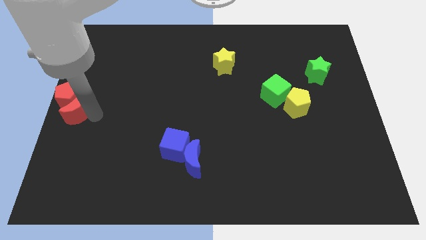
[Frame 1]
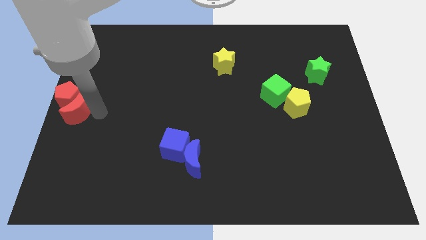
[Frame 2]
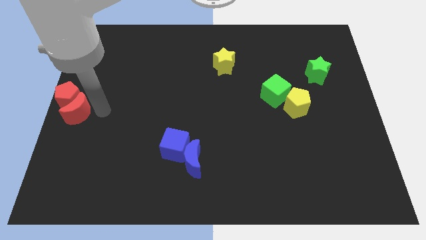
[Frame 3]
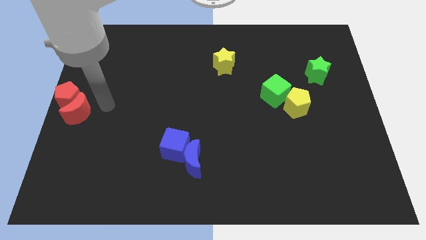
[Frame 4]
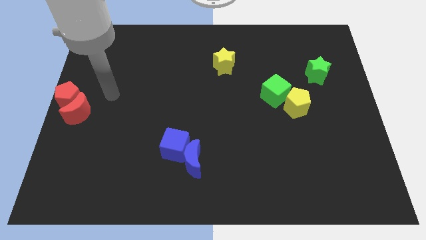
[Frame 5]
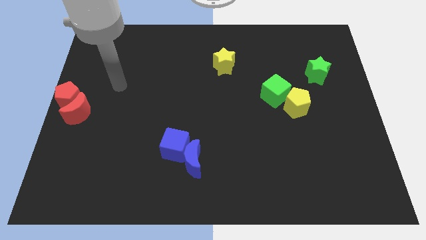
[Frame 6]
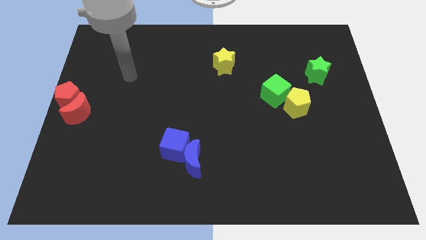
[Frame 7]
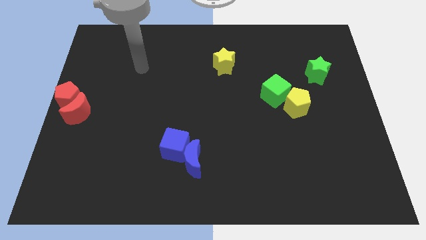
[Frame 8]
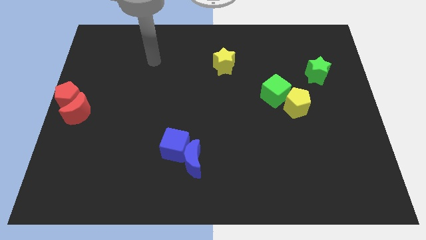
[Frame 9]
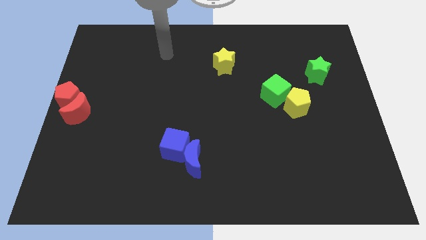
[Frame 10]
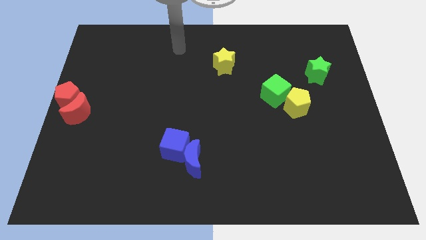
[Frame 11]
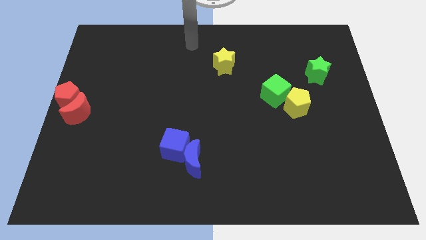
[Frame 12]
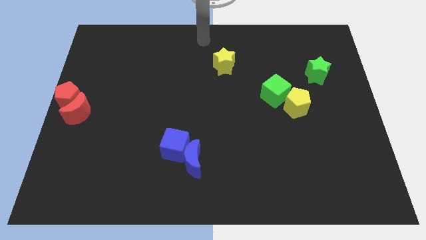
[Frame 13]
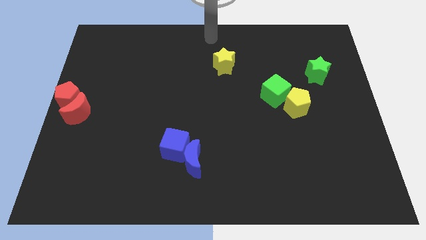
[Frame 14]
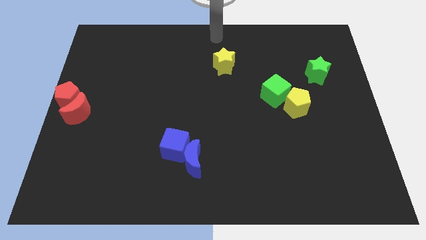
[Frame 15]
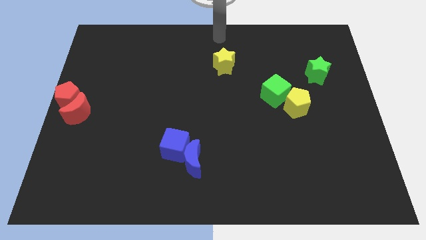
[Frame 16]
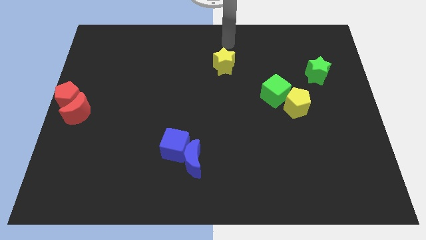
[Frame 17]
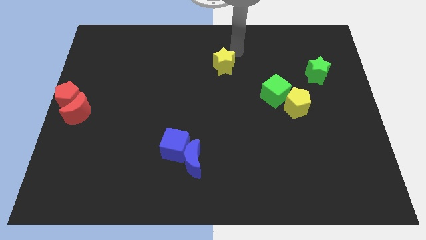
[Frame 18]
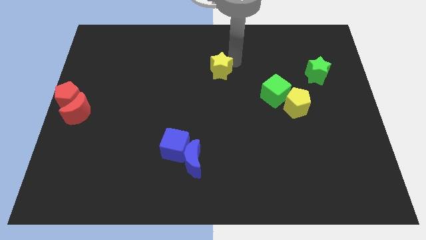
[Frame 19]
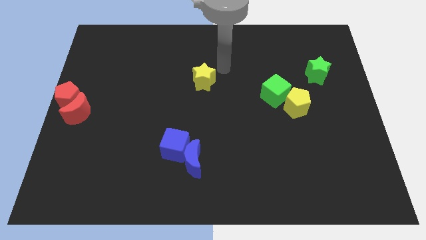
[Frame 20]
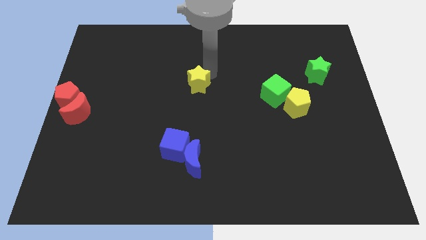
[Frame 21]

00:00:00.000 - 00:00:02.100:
push the yellow star towards the centre of the board

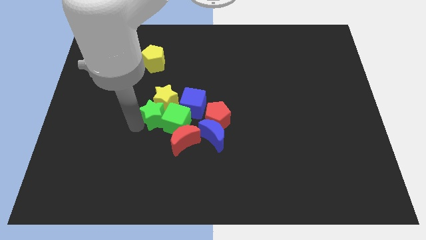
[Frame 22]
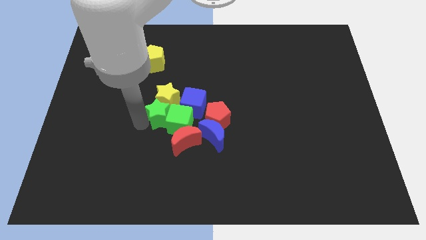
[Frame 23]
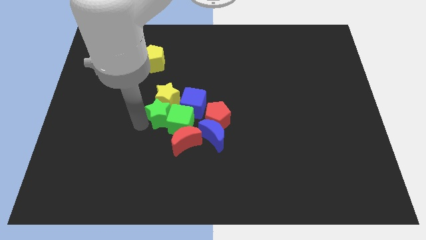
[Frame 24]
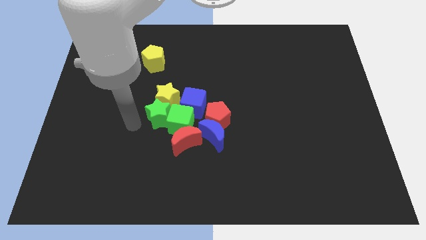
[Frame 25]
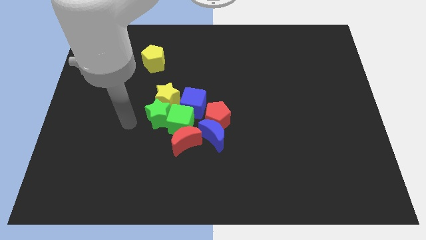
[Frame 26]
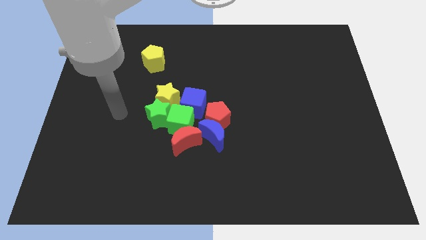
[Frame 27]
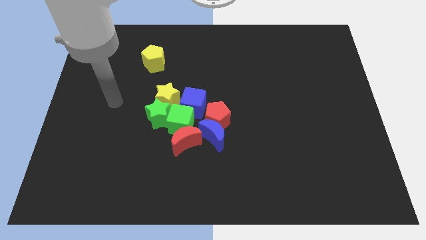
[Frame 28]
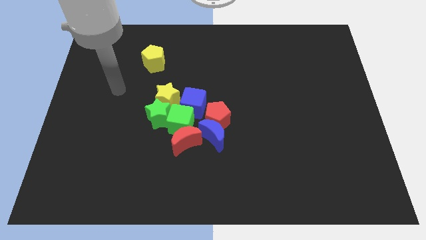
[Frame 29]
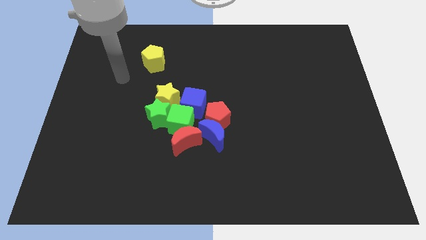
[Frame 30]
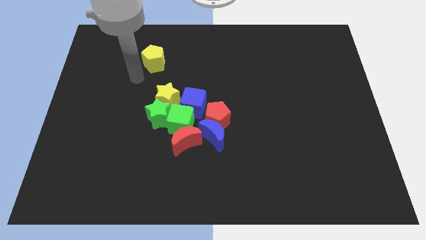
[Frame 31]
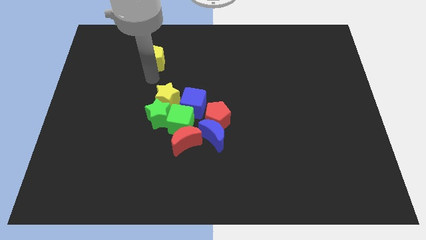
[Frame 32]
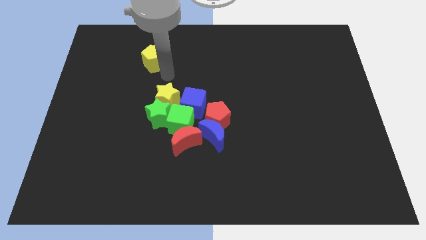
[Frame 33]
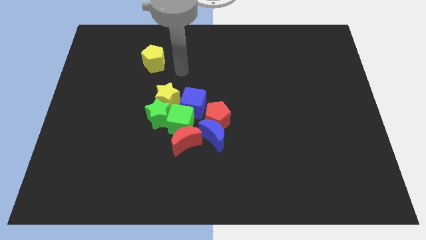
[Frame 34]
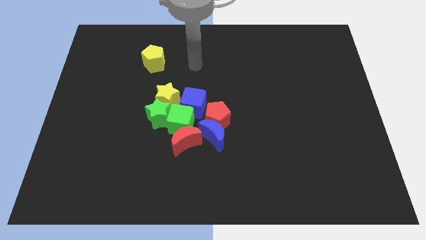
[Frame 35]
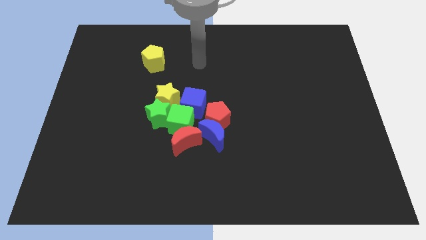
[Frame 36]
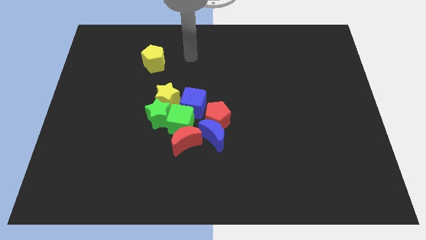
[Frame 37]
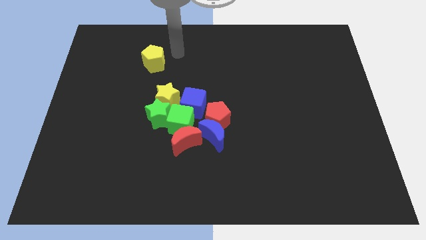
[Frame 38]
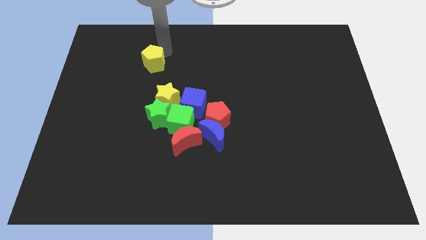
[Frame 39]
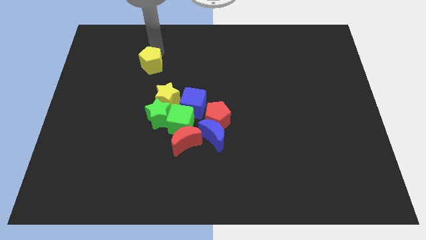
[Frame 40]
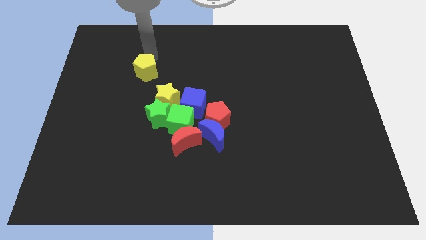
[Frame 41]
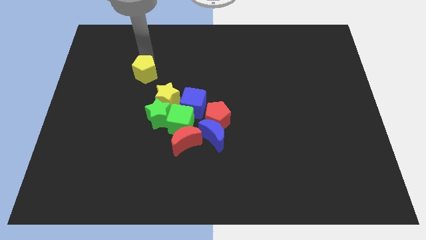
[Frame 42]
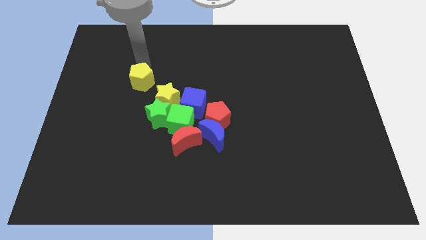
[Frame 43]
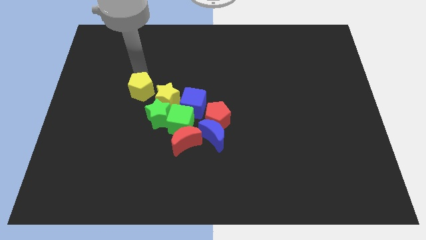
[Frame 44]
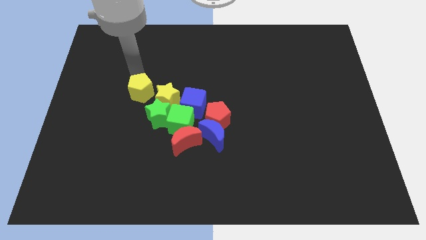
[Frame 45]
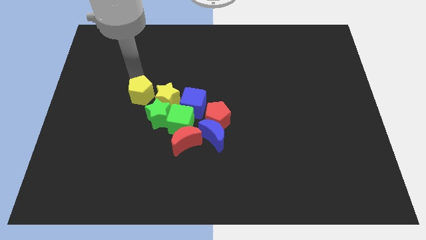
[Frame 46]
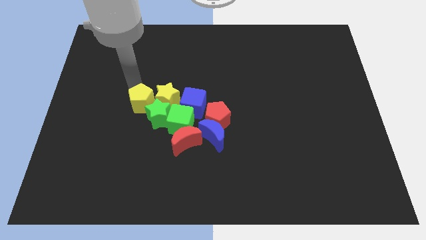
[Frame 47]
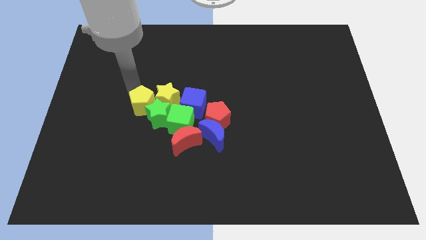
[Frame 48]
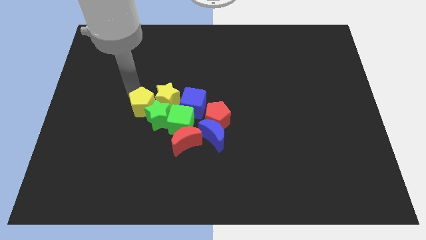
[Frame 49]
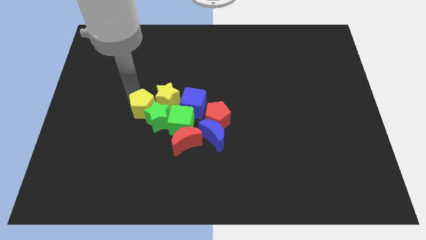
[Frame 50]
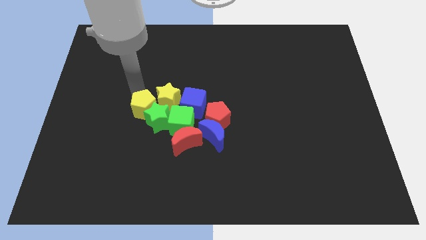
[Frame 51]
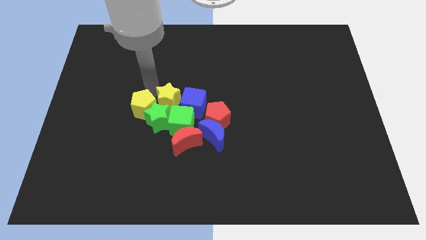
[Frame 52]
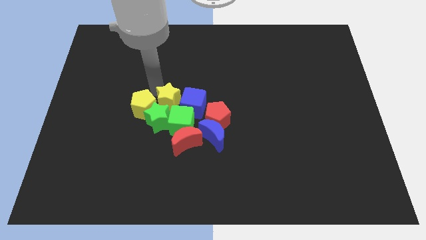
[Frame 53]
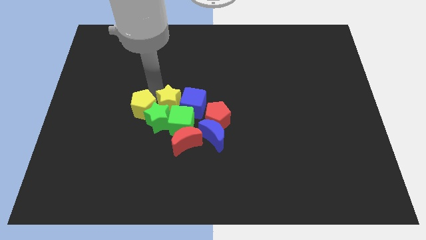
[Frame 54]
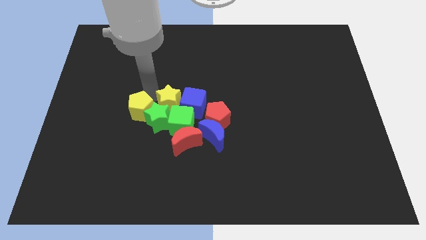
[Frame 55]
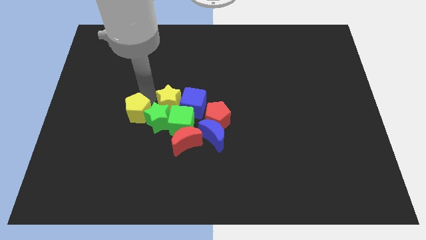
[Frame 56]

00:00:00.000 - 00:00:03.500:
bring yellow pentagon into group of blocks

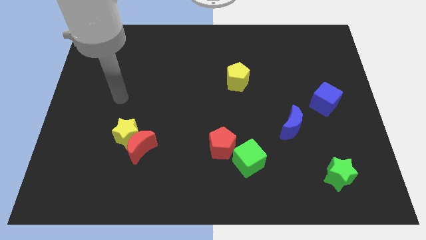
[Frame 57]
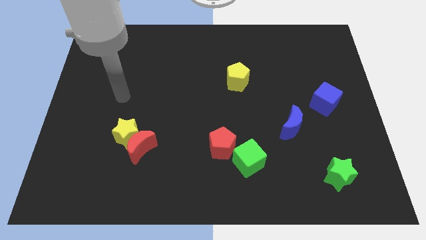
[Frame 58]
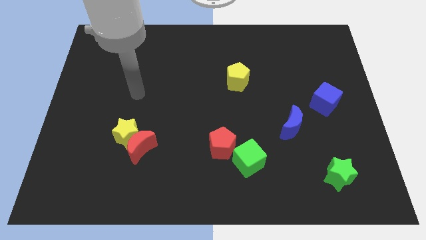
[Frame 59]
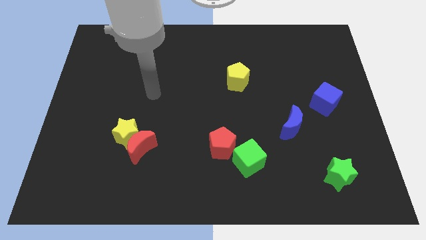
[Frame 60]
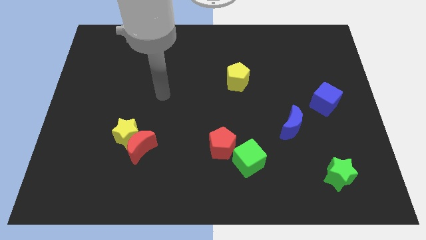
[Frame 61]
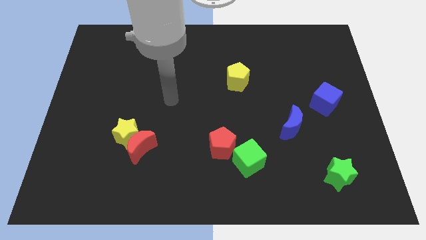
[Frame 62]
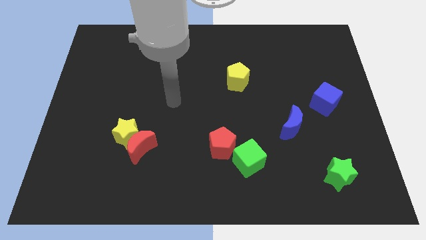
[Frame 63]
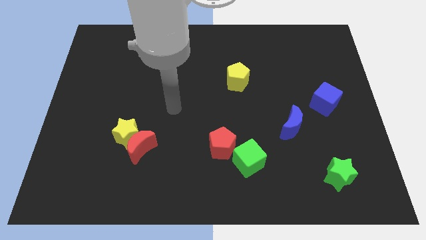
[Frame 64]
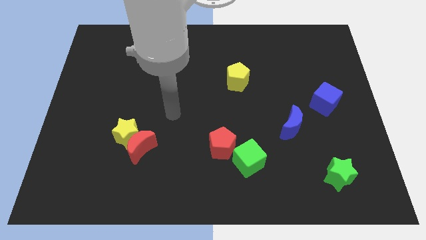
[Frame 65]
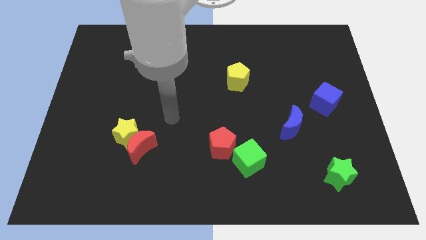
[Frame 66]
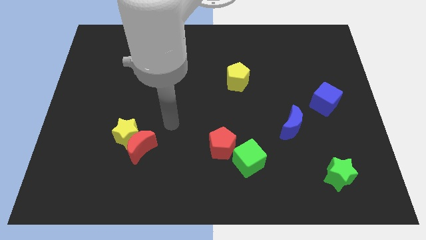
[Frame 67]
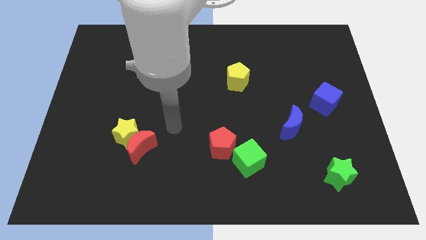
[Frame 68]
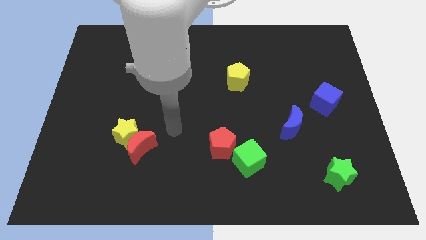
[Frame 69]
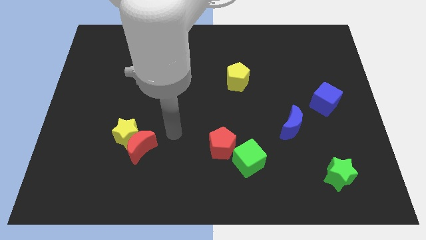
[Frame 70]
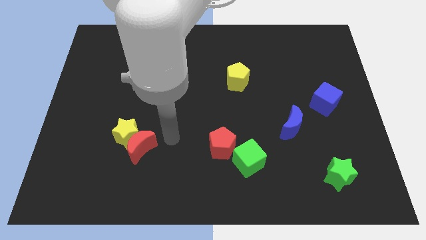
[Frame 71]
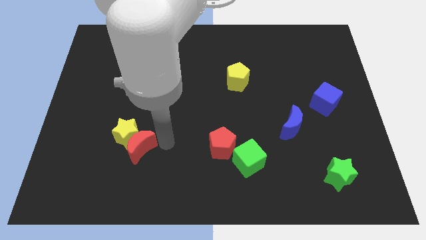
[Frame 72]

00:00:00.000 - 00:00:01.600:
place your arm to the right of red moon

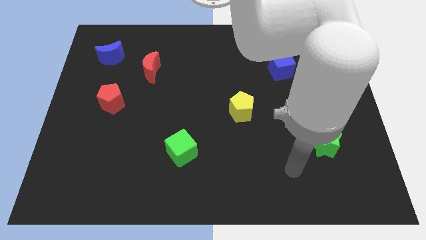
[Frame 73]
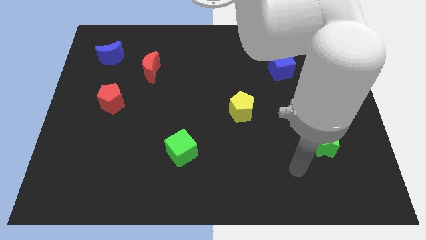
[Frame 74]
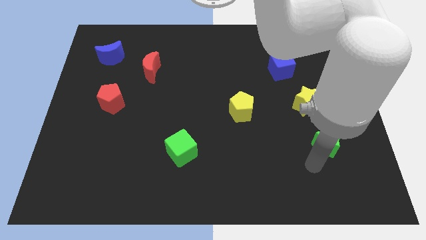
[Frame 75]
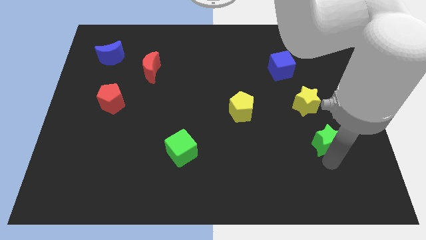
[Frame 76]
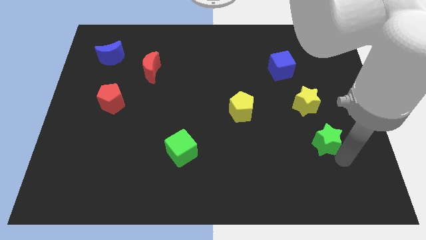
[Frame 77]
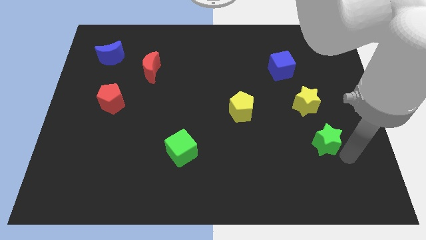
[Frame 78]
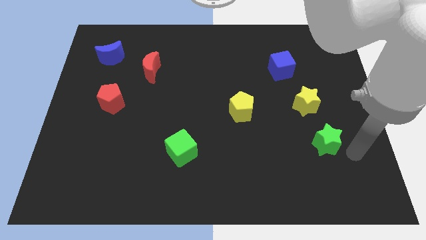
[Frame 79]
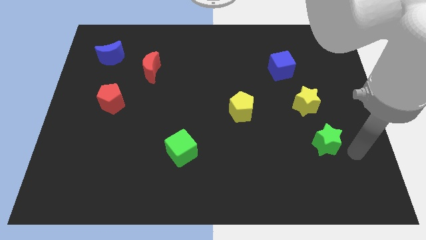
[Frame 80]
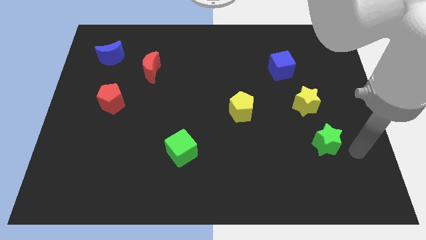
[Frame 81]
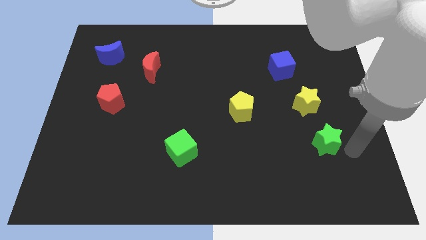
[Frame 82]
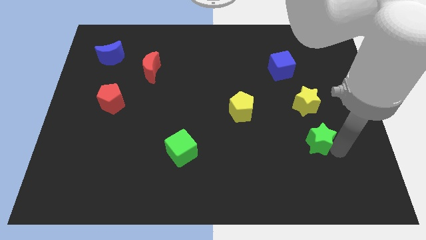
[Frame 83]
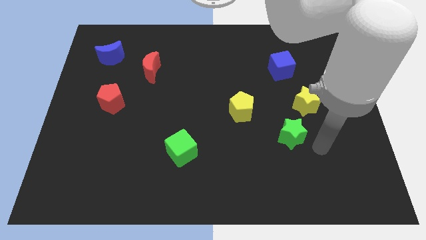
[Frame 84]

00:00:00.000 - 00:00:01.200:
move the green star slightly to the left

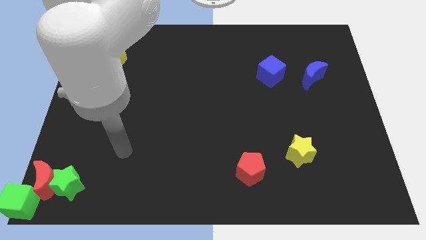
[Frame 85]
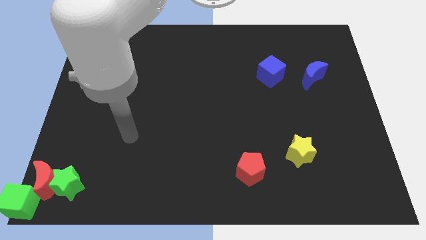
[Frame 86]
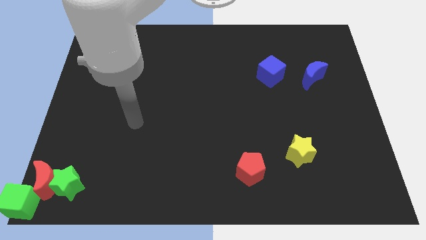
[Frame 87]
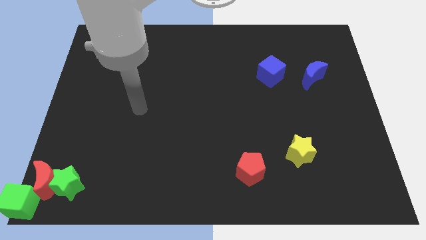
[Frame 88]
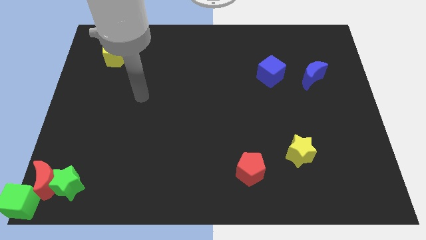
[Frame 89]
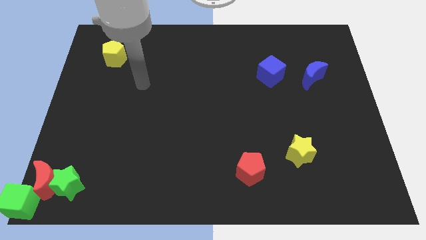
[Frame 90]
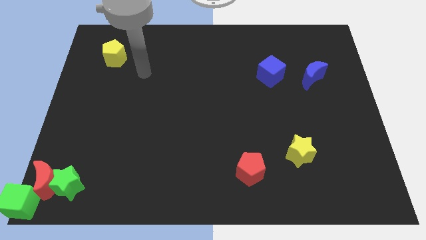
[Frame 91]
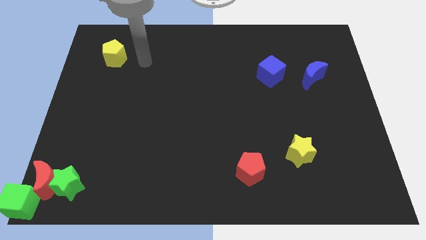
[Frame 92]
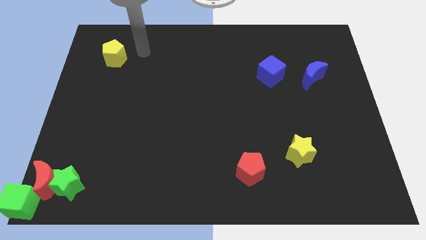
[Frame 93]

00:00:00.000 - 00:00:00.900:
move your arm towards the yellow pentagon
